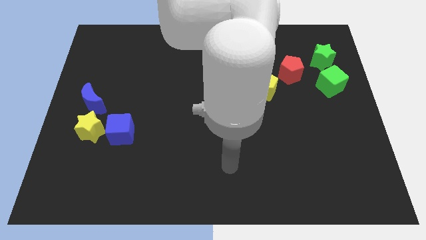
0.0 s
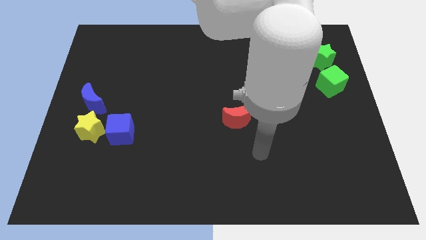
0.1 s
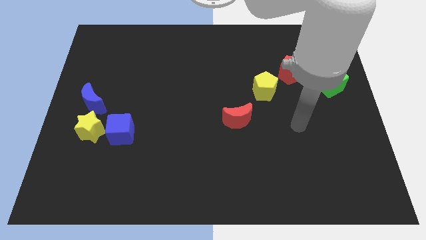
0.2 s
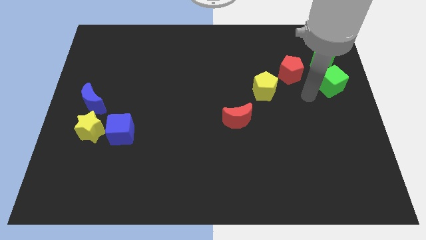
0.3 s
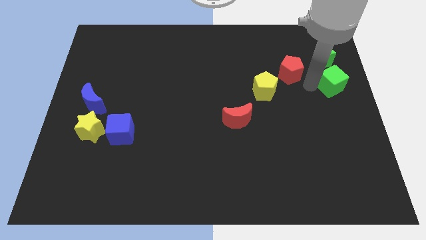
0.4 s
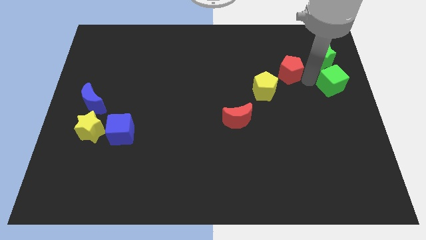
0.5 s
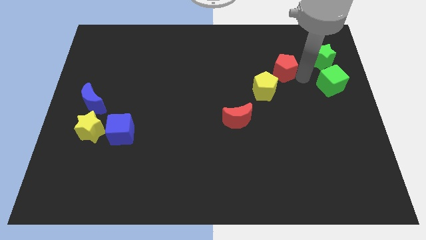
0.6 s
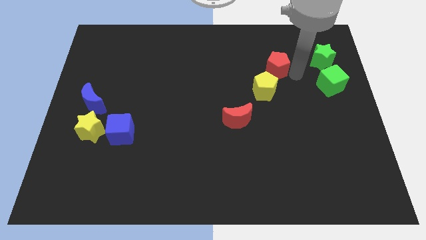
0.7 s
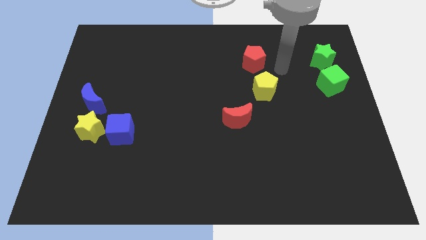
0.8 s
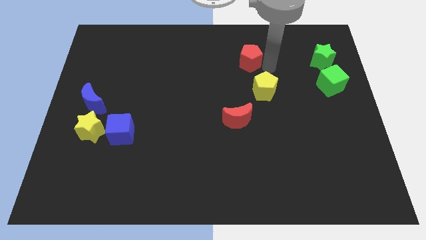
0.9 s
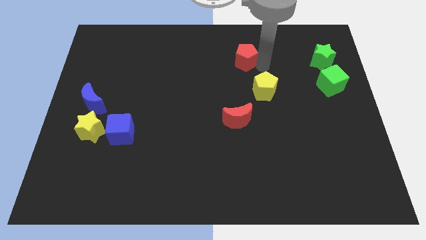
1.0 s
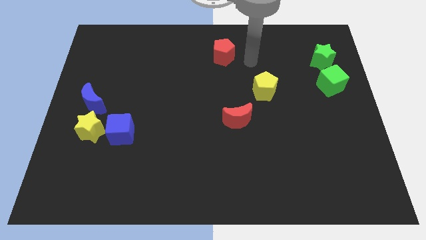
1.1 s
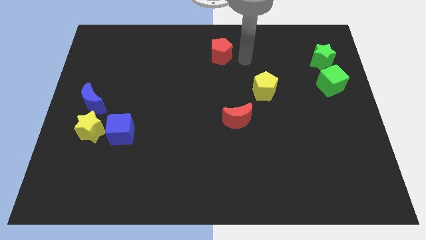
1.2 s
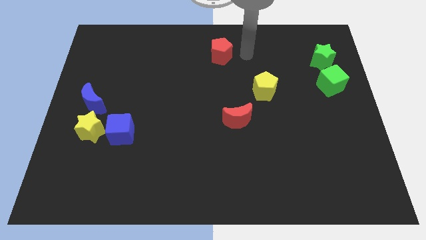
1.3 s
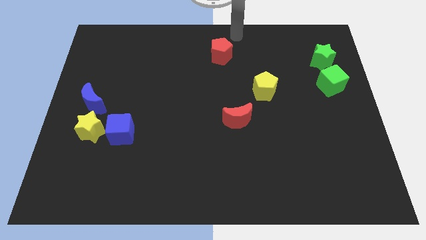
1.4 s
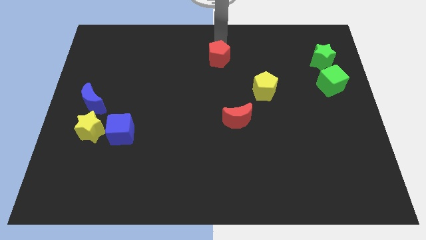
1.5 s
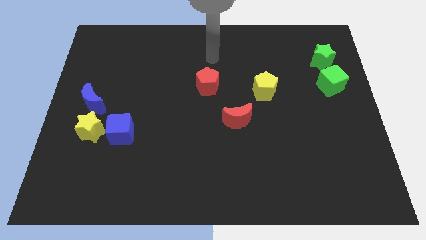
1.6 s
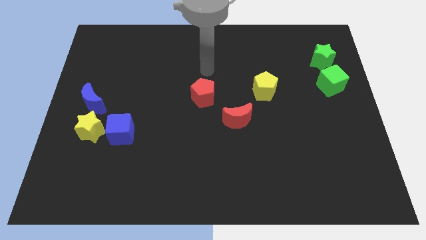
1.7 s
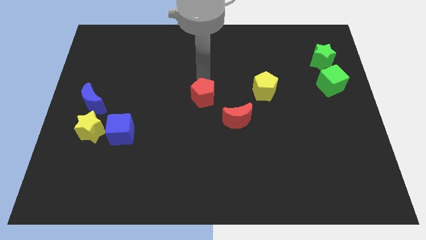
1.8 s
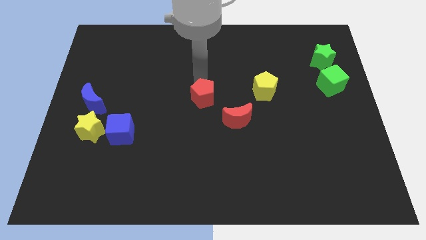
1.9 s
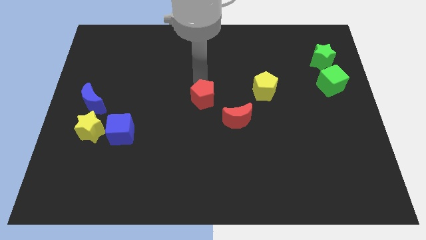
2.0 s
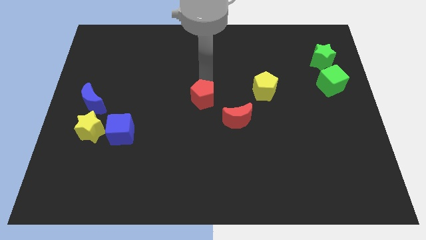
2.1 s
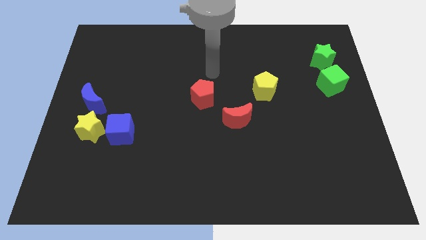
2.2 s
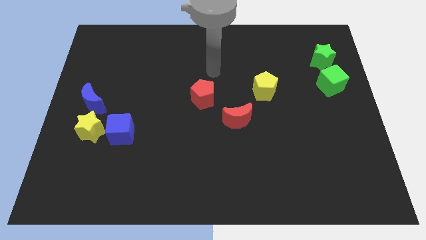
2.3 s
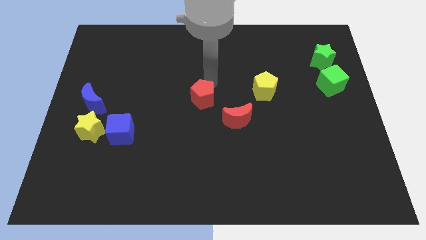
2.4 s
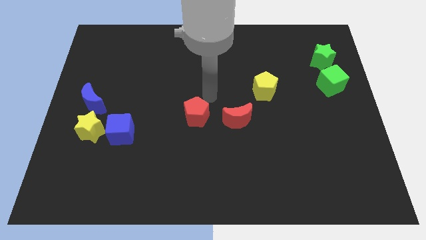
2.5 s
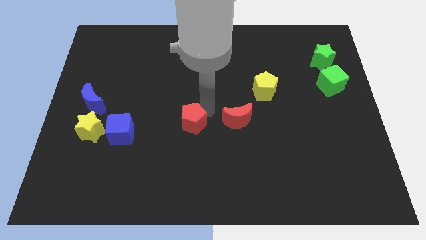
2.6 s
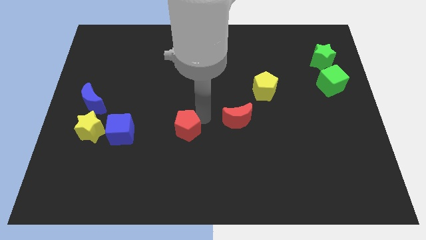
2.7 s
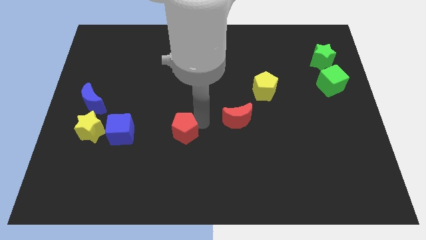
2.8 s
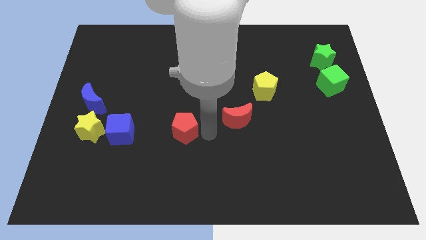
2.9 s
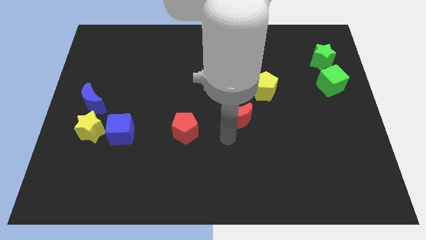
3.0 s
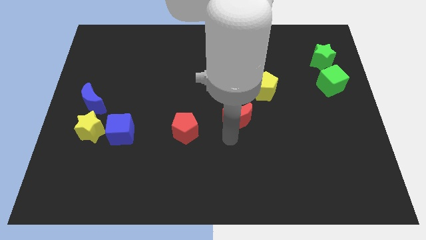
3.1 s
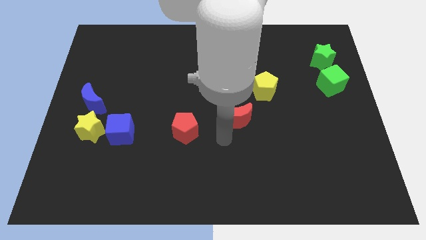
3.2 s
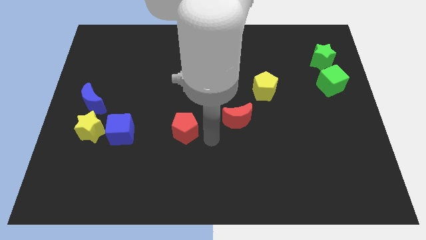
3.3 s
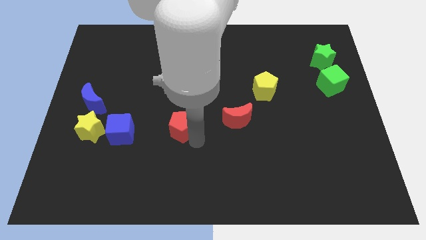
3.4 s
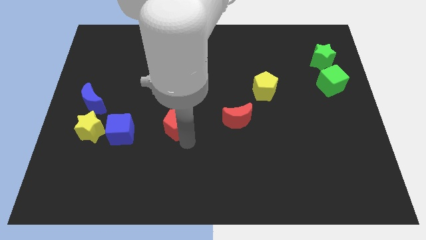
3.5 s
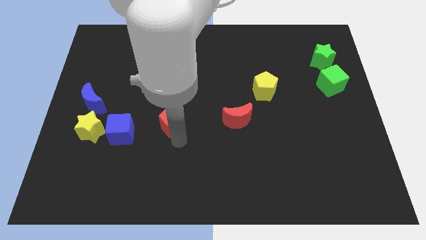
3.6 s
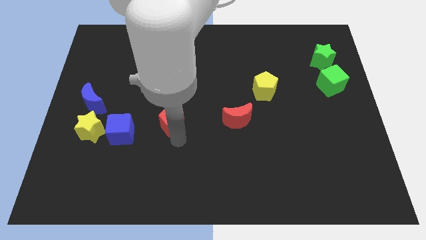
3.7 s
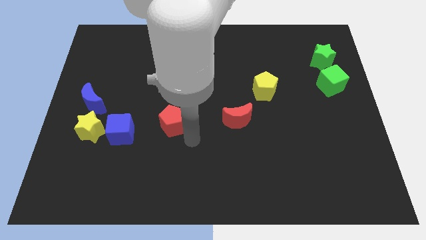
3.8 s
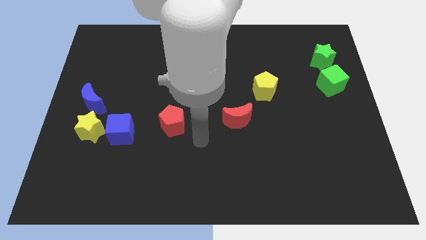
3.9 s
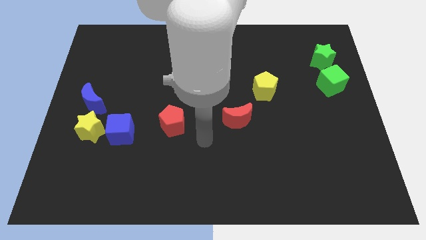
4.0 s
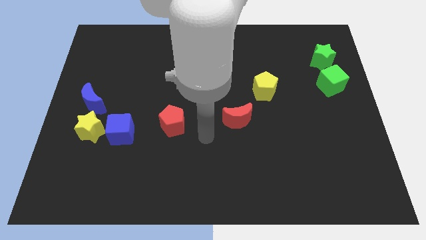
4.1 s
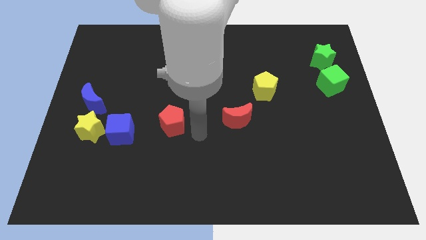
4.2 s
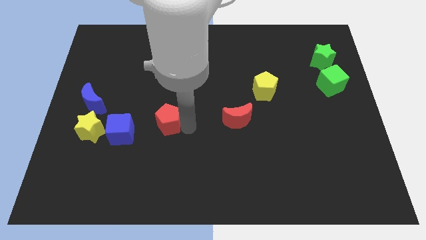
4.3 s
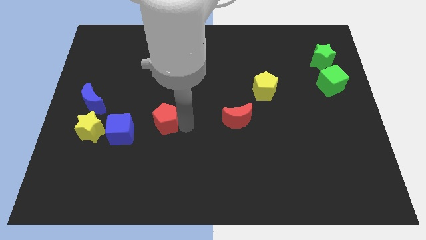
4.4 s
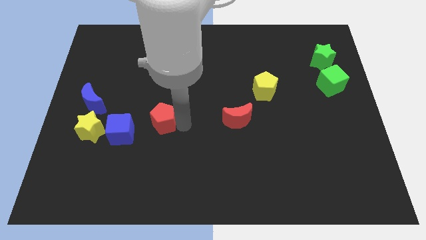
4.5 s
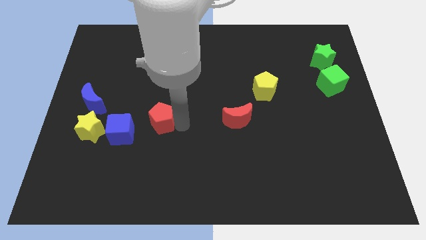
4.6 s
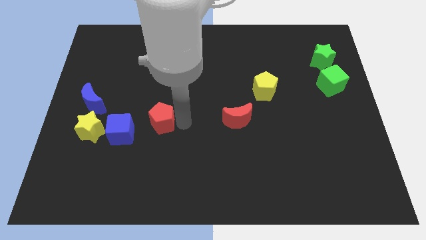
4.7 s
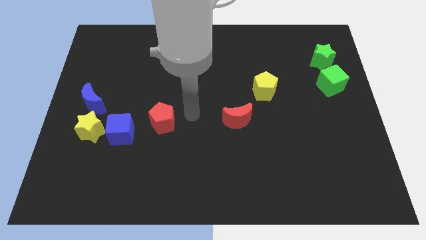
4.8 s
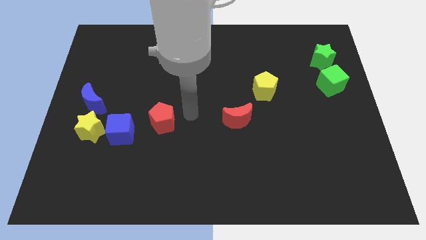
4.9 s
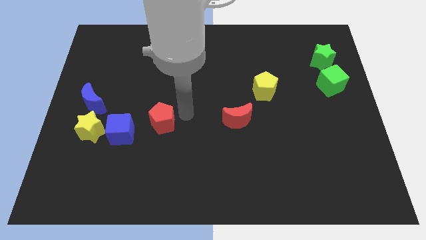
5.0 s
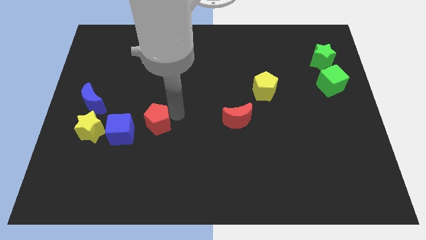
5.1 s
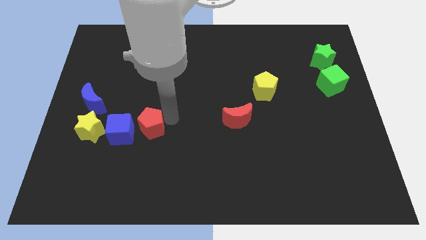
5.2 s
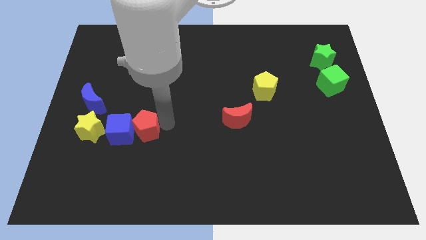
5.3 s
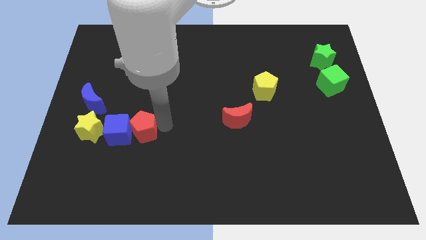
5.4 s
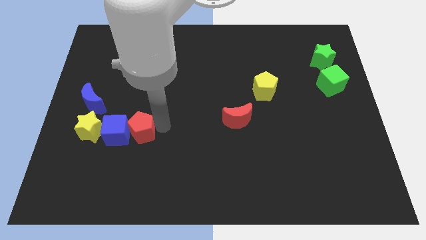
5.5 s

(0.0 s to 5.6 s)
slide the red pentagon next to the blue cube

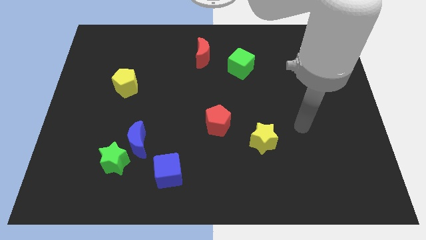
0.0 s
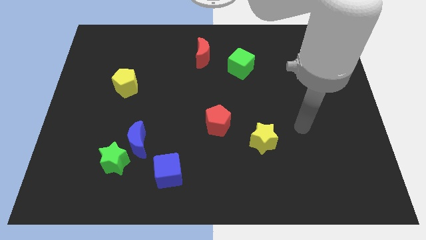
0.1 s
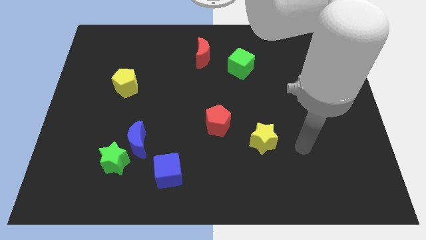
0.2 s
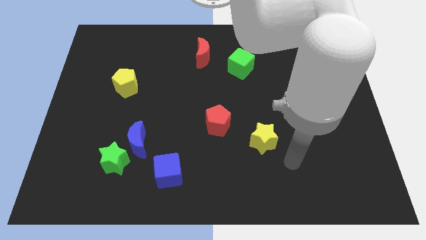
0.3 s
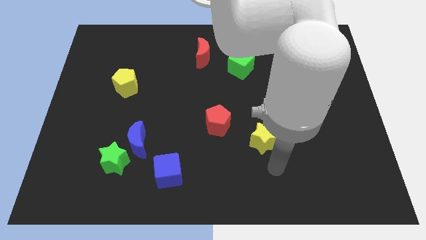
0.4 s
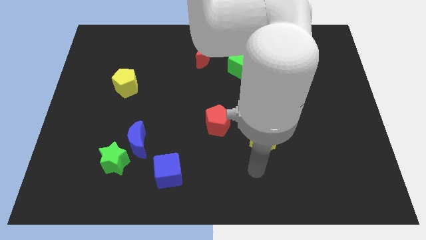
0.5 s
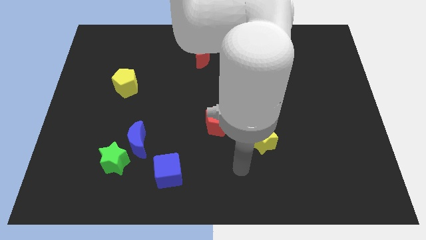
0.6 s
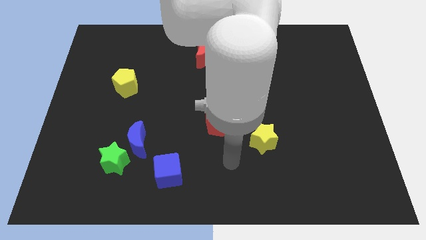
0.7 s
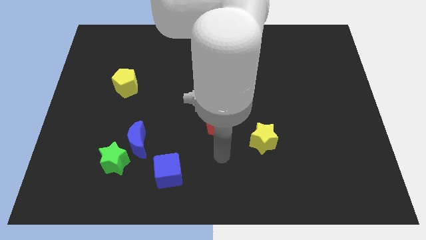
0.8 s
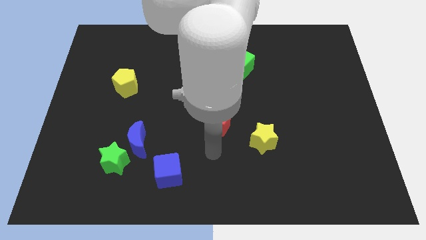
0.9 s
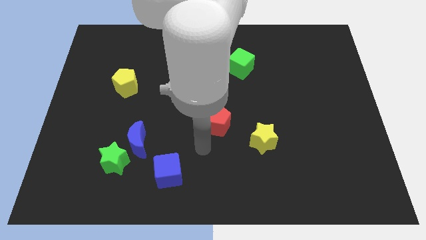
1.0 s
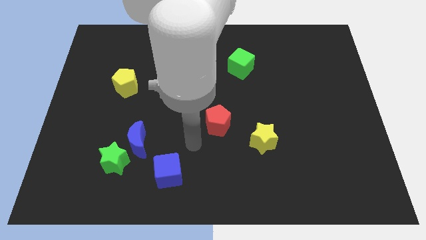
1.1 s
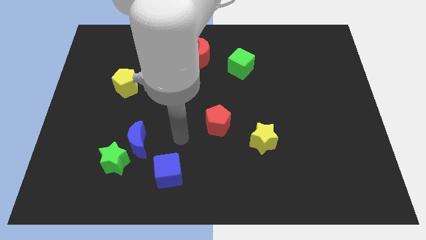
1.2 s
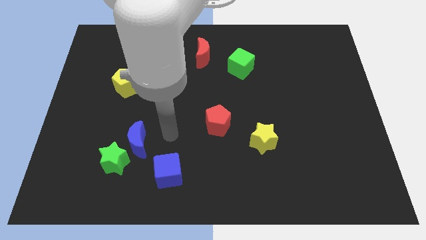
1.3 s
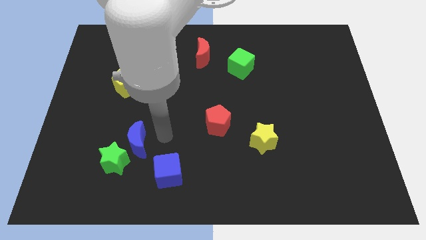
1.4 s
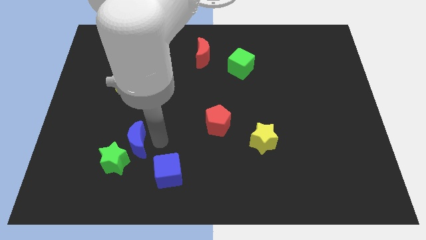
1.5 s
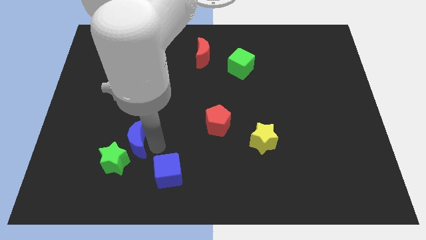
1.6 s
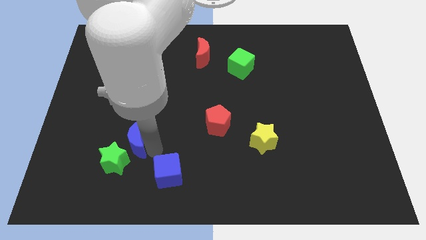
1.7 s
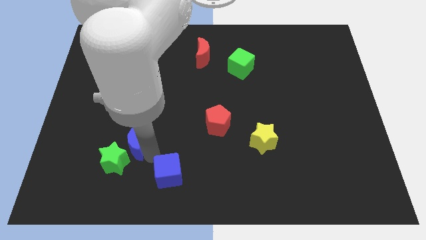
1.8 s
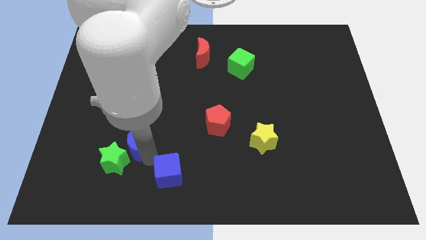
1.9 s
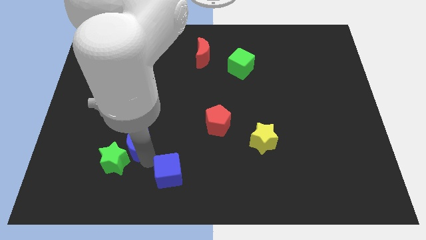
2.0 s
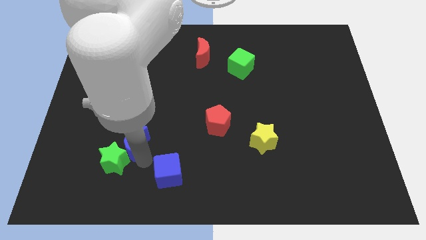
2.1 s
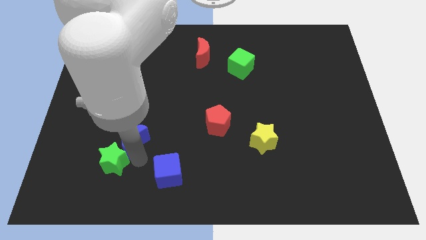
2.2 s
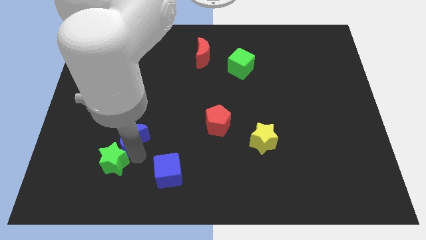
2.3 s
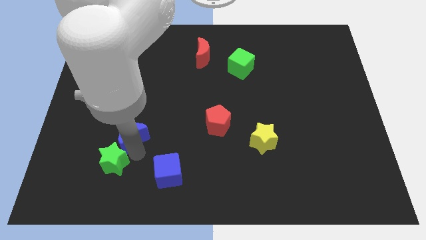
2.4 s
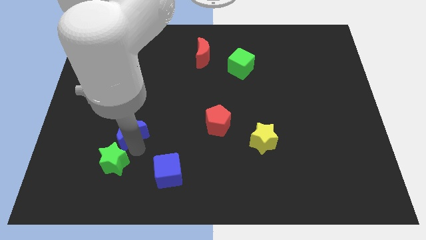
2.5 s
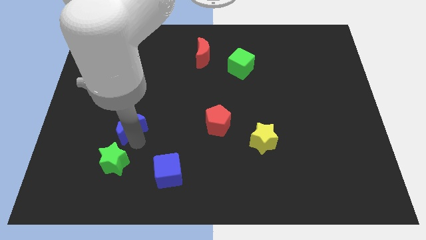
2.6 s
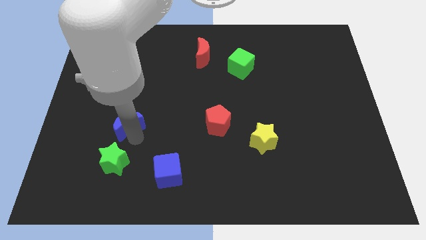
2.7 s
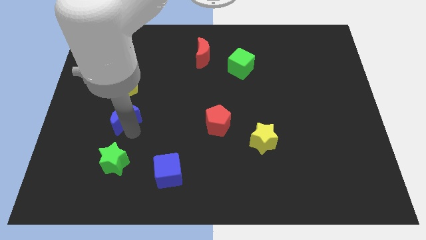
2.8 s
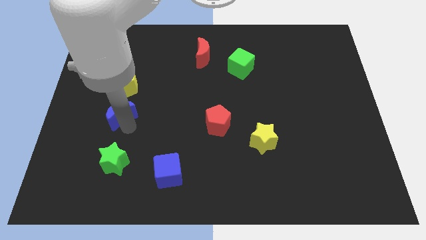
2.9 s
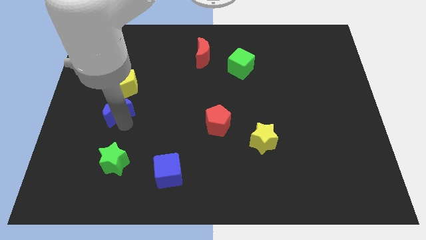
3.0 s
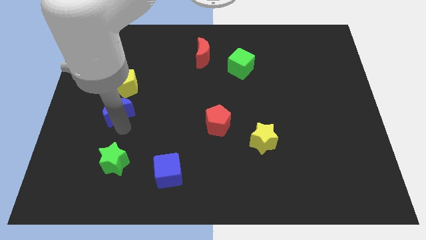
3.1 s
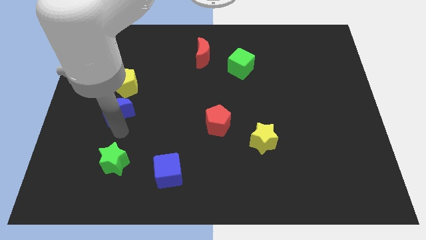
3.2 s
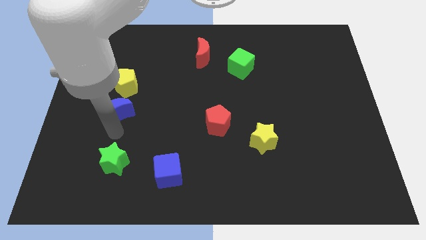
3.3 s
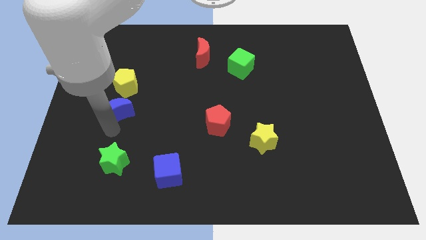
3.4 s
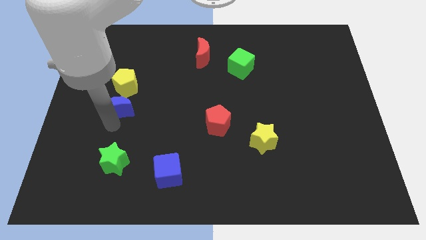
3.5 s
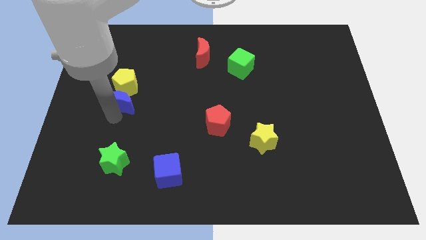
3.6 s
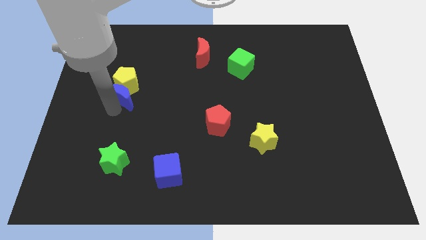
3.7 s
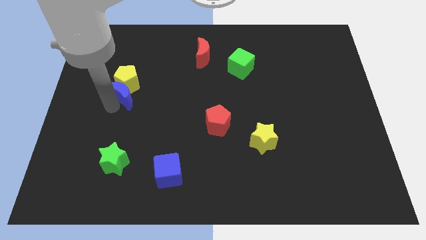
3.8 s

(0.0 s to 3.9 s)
slide the blue moon towards the yellow pentagon
